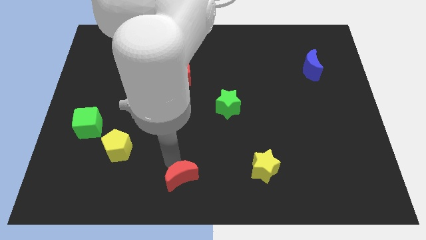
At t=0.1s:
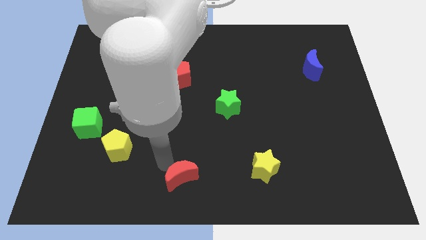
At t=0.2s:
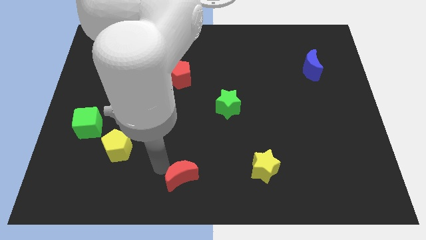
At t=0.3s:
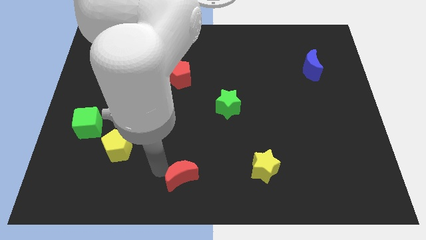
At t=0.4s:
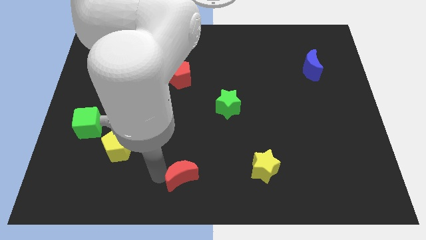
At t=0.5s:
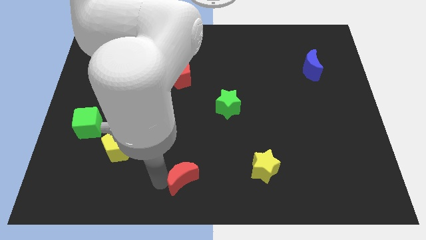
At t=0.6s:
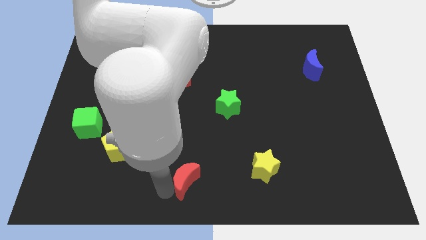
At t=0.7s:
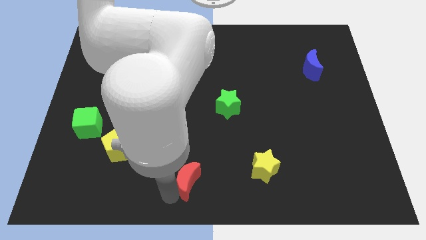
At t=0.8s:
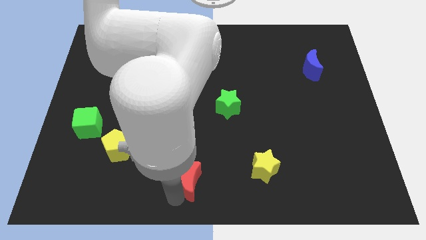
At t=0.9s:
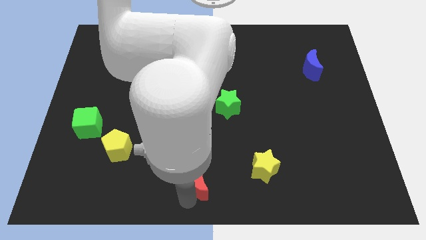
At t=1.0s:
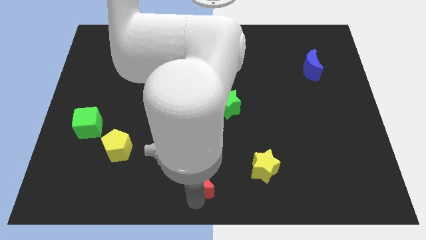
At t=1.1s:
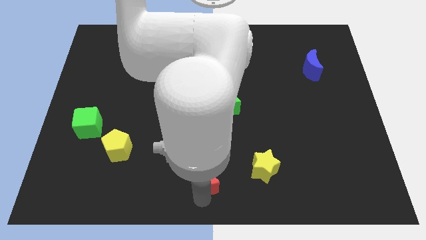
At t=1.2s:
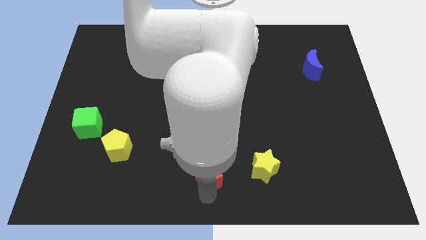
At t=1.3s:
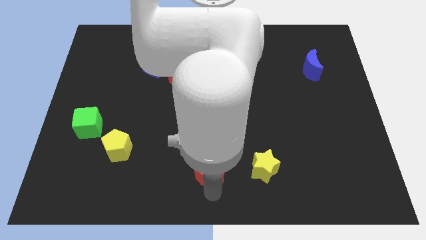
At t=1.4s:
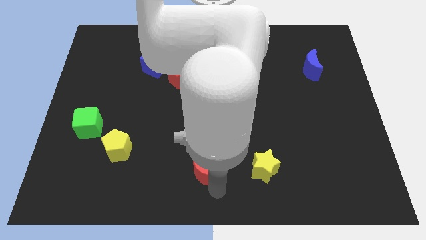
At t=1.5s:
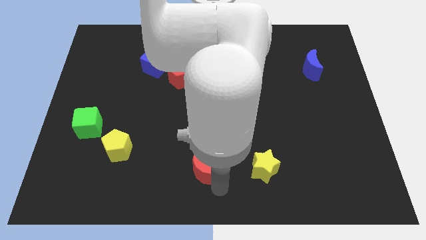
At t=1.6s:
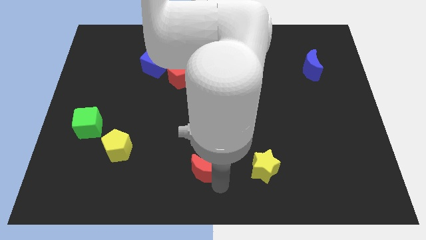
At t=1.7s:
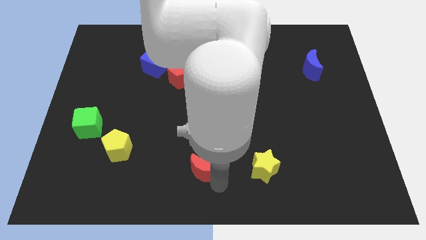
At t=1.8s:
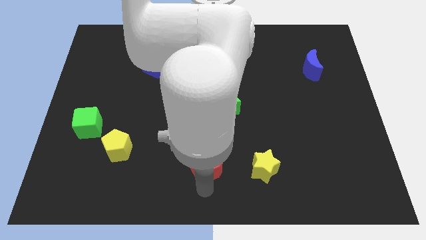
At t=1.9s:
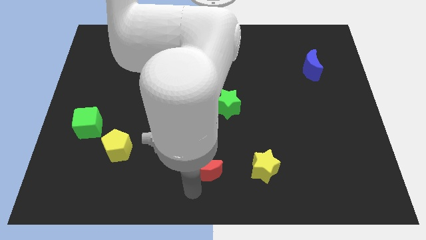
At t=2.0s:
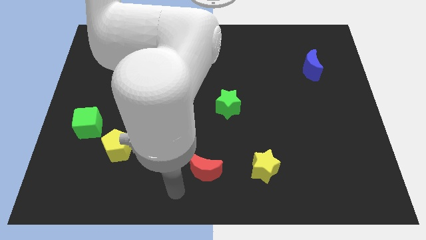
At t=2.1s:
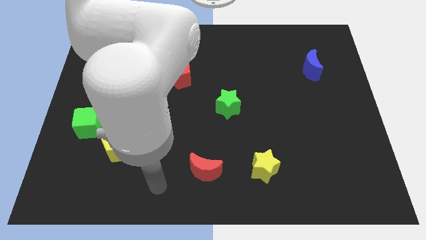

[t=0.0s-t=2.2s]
place red crescent beside yellow star

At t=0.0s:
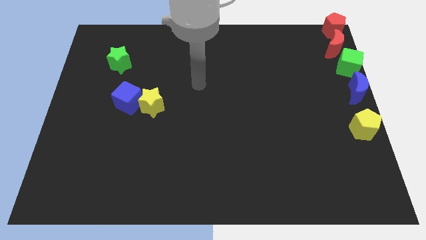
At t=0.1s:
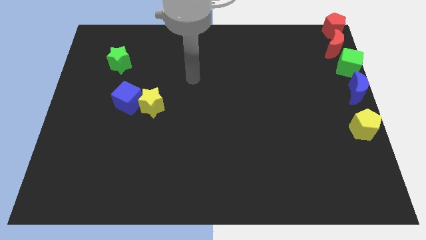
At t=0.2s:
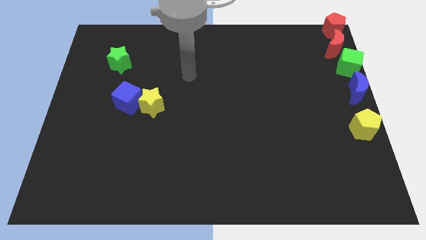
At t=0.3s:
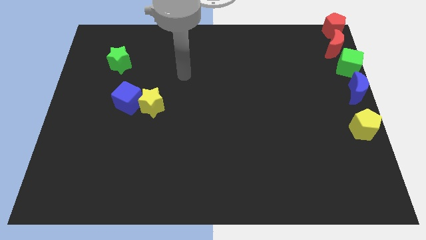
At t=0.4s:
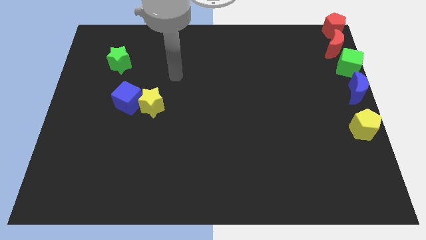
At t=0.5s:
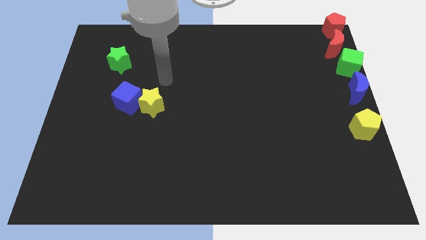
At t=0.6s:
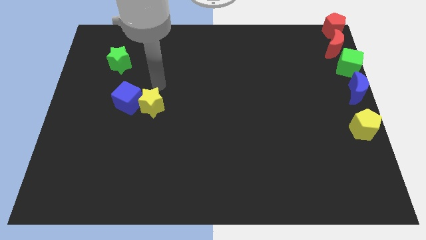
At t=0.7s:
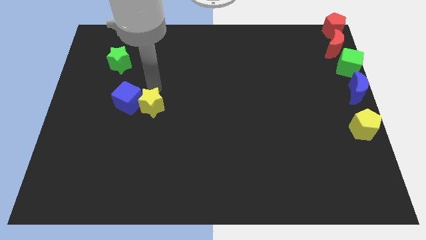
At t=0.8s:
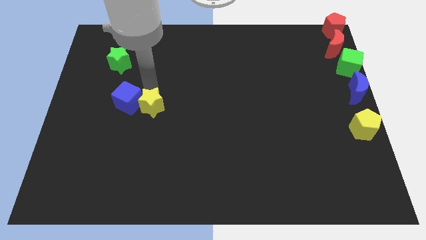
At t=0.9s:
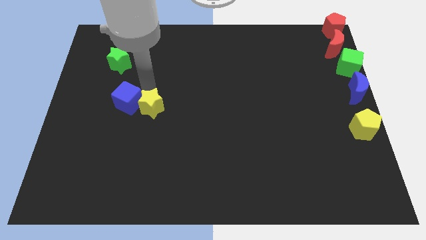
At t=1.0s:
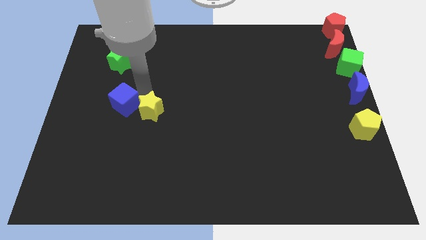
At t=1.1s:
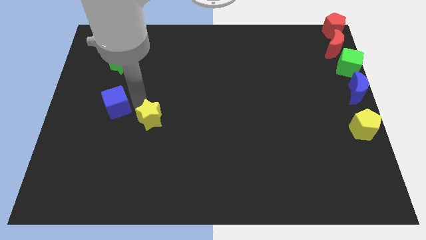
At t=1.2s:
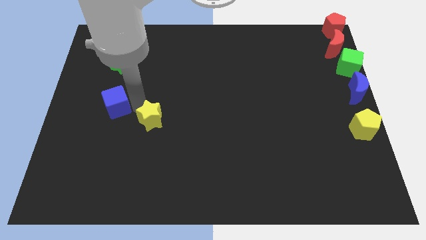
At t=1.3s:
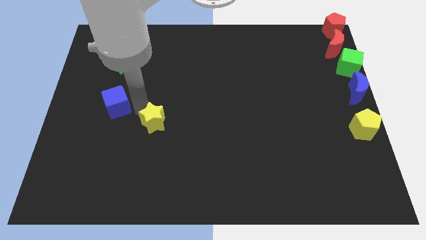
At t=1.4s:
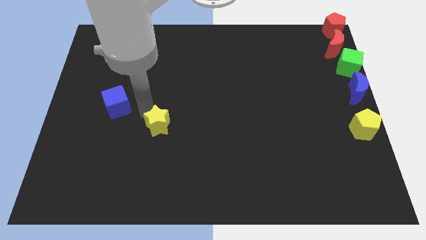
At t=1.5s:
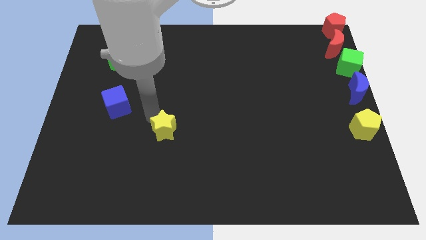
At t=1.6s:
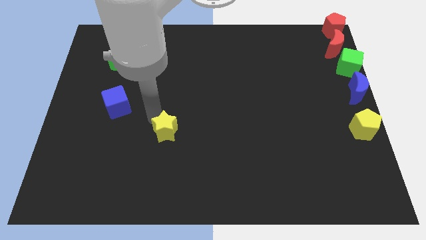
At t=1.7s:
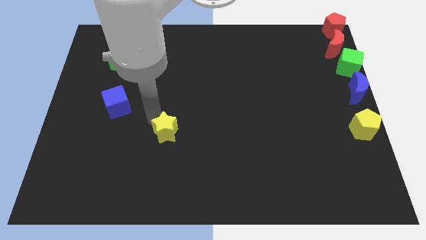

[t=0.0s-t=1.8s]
separate the blue cube and the yellow star

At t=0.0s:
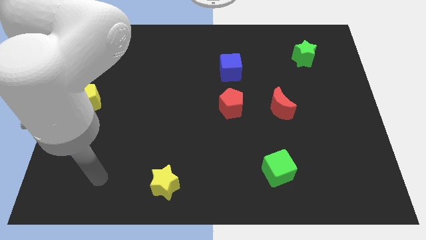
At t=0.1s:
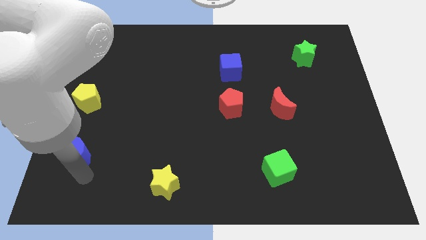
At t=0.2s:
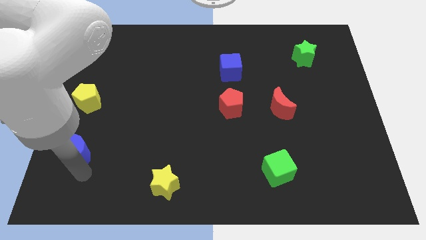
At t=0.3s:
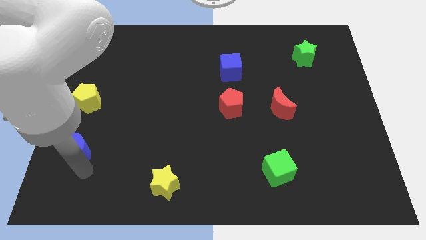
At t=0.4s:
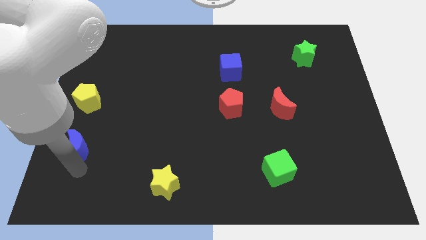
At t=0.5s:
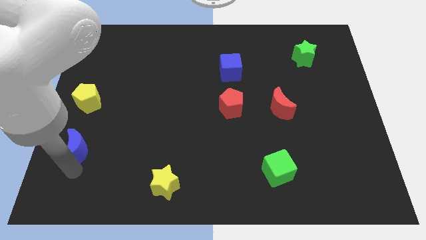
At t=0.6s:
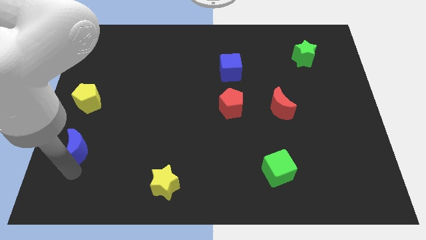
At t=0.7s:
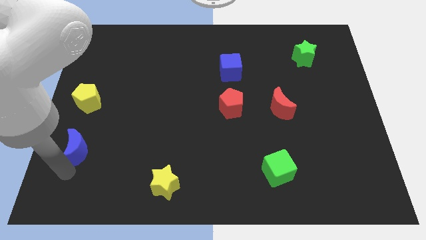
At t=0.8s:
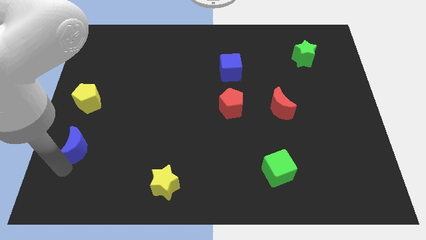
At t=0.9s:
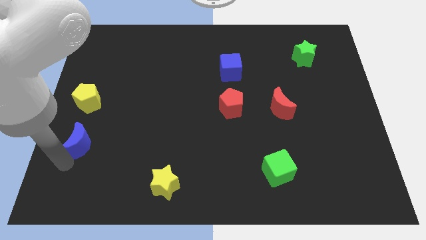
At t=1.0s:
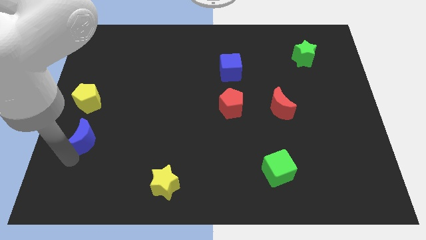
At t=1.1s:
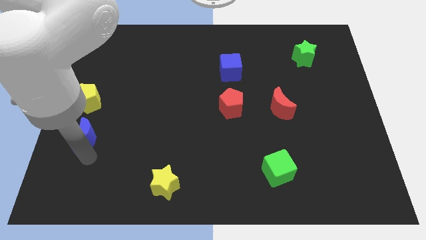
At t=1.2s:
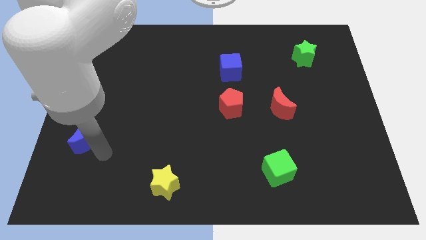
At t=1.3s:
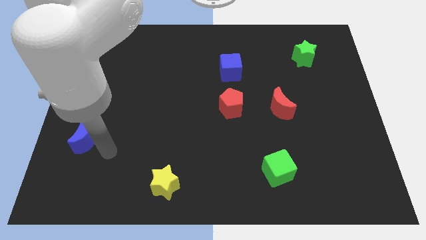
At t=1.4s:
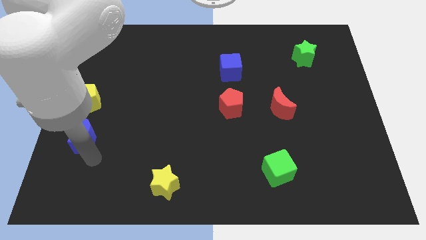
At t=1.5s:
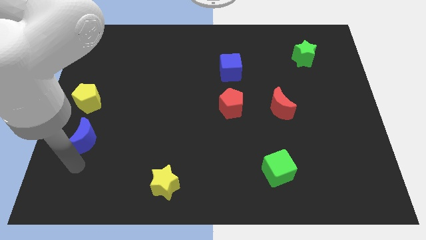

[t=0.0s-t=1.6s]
push the blue moon to the bottom side of the yellow pentagon

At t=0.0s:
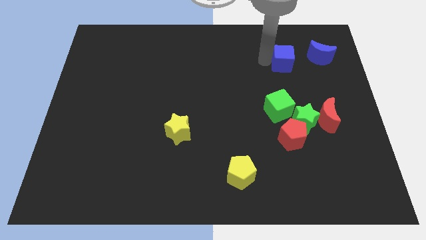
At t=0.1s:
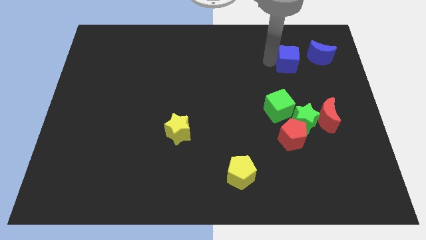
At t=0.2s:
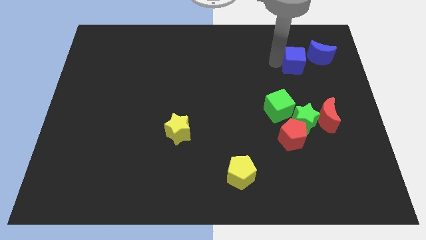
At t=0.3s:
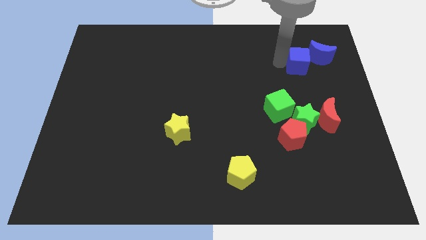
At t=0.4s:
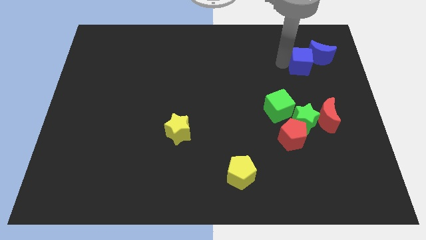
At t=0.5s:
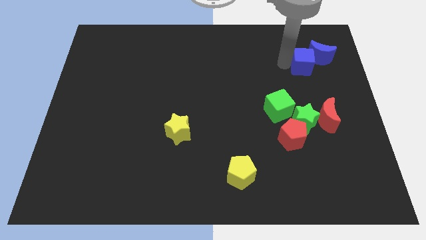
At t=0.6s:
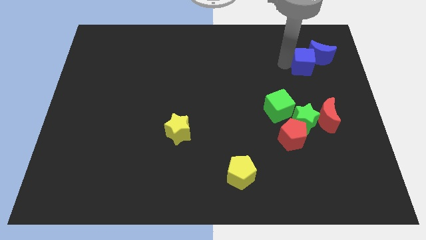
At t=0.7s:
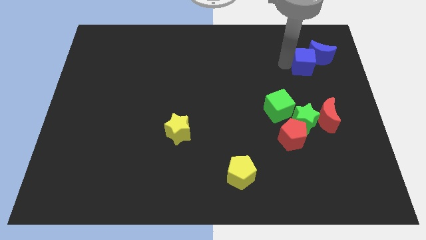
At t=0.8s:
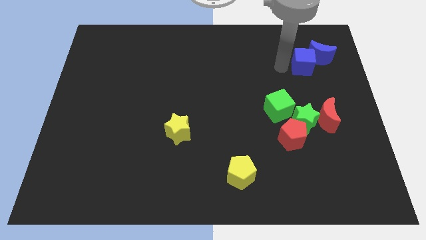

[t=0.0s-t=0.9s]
place blue cube above green star

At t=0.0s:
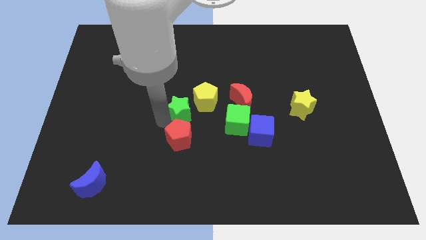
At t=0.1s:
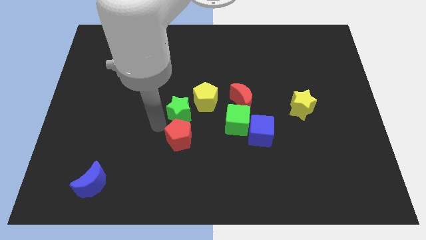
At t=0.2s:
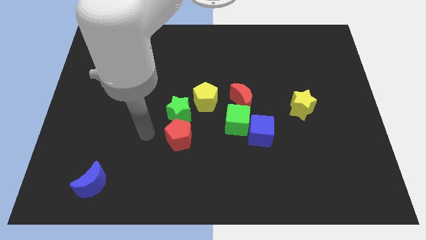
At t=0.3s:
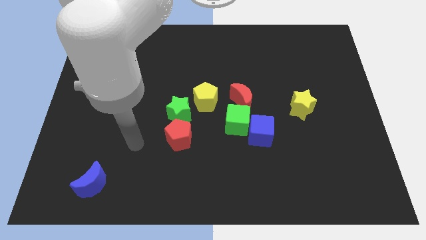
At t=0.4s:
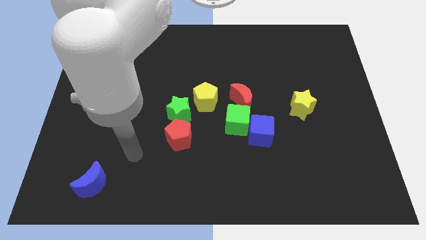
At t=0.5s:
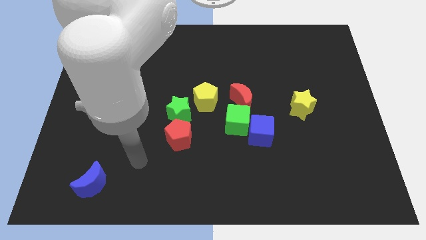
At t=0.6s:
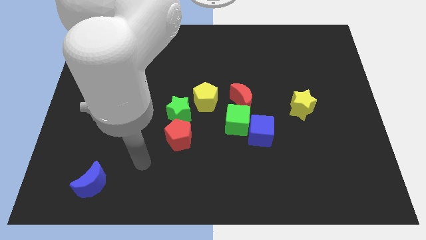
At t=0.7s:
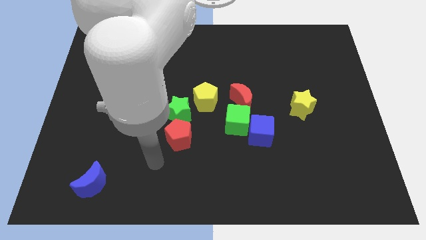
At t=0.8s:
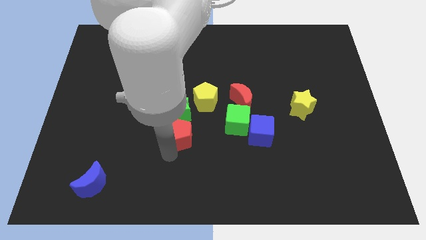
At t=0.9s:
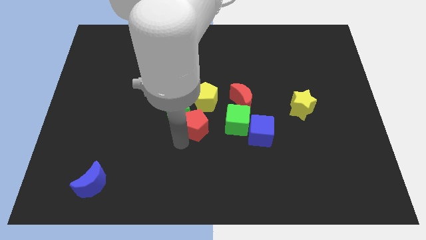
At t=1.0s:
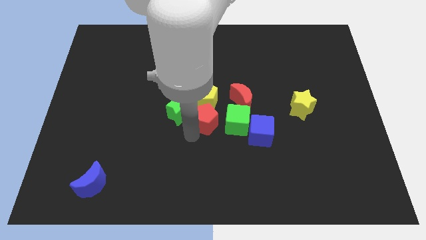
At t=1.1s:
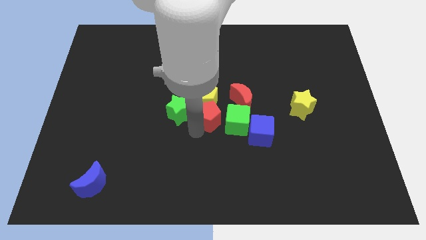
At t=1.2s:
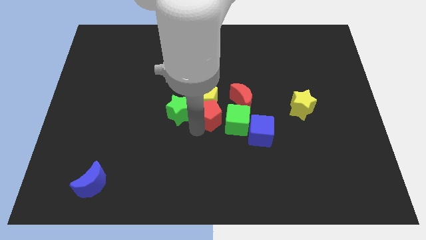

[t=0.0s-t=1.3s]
push the red pentagon to the bottom side of yellow pentagon

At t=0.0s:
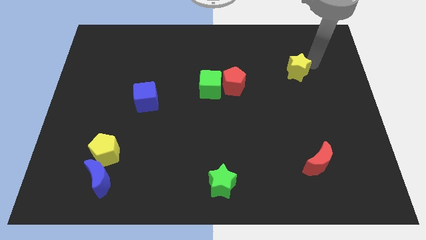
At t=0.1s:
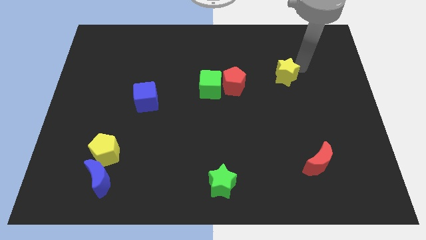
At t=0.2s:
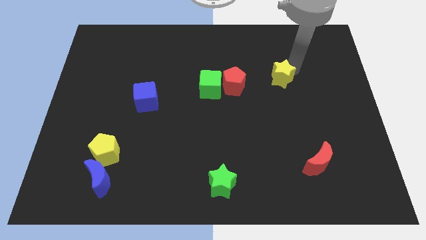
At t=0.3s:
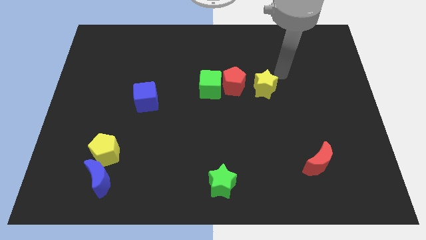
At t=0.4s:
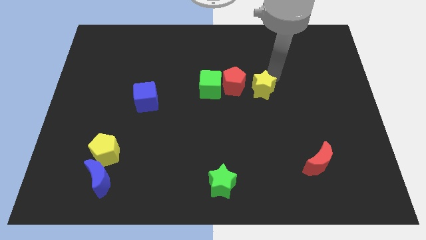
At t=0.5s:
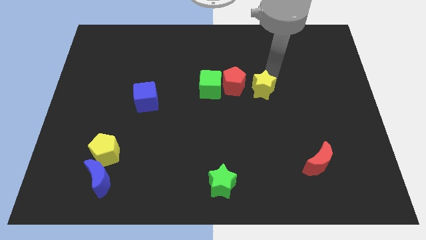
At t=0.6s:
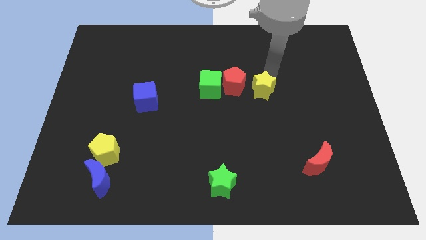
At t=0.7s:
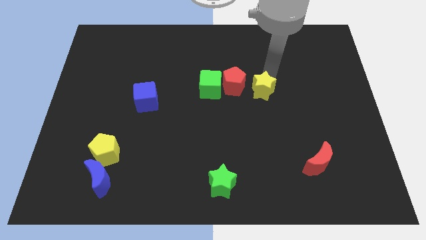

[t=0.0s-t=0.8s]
place the yellow star to the right side of red pentagon

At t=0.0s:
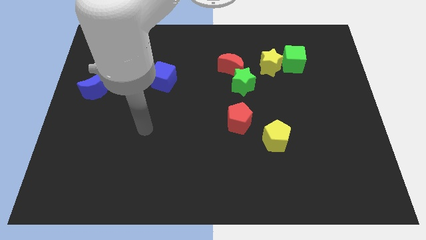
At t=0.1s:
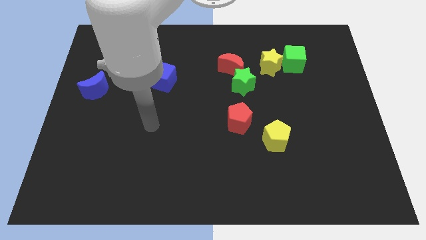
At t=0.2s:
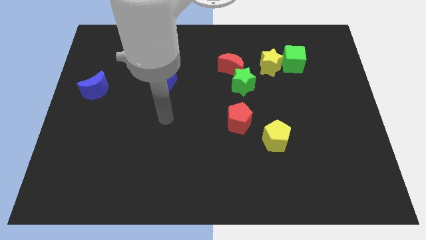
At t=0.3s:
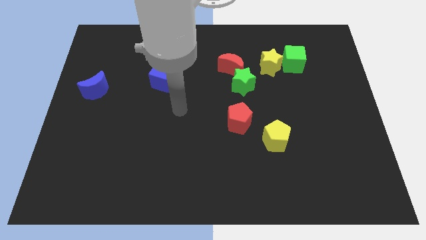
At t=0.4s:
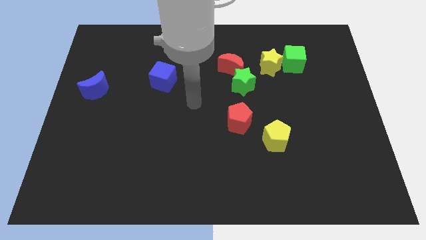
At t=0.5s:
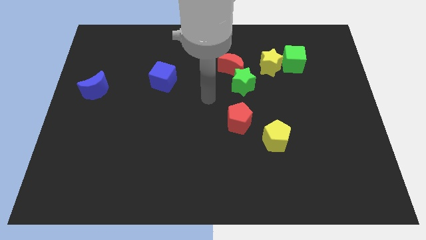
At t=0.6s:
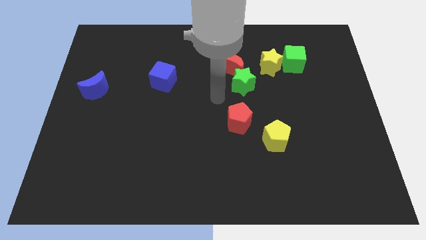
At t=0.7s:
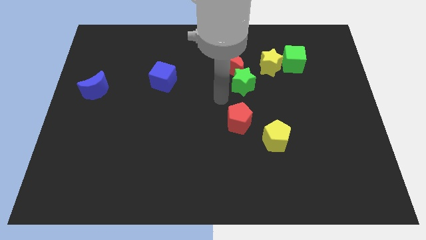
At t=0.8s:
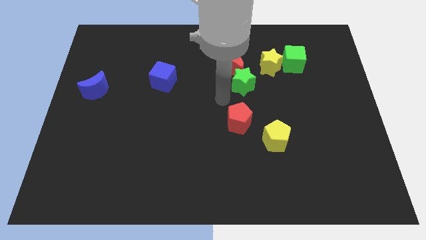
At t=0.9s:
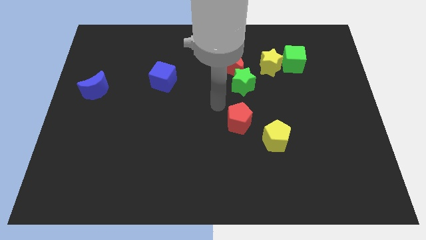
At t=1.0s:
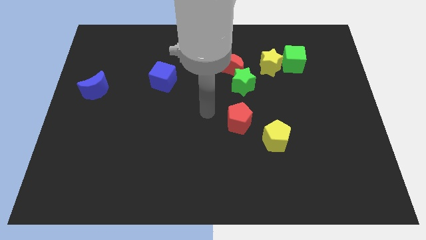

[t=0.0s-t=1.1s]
point your arm at the center of the board
